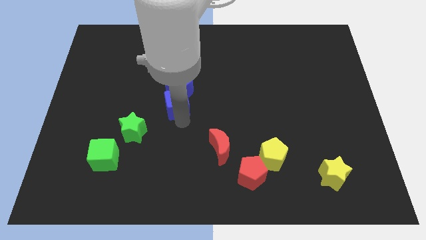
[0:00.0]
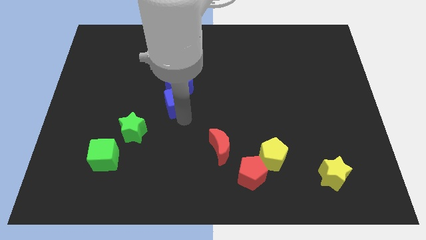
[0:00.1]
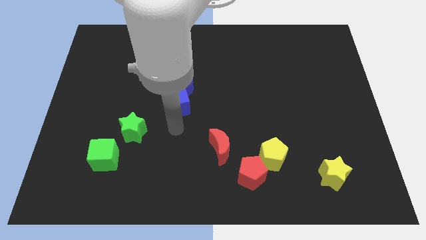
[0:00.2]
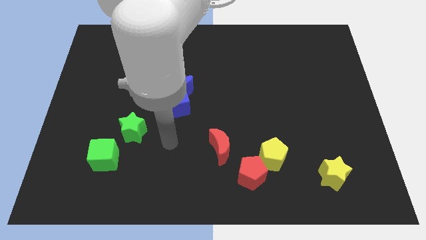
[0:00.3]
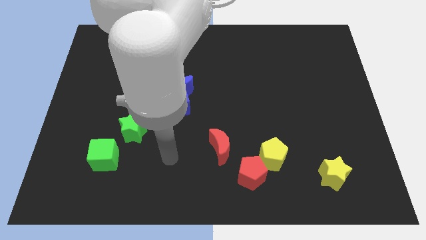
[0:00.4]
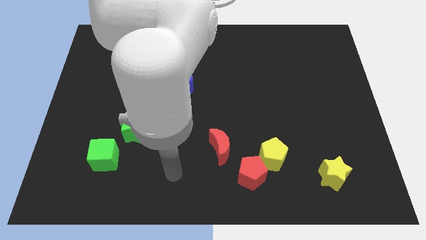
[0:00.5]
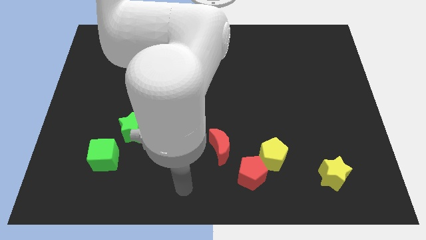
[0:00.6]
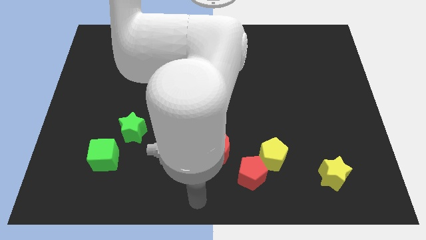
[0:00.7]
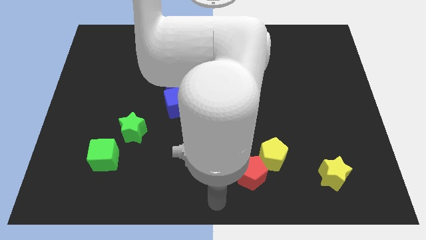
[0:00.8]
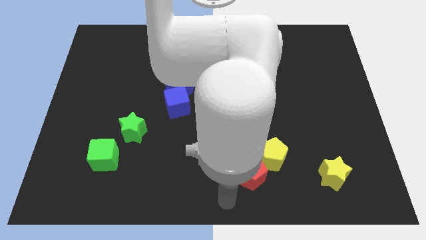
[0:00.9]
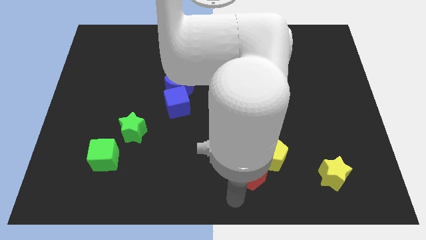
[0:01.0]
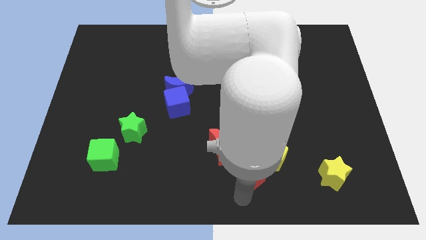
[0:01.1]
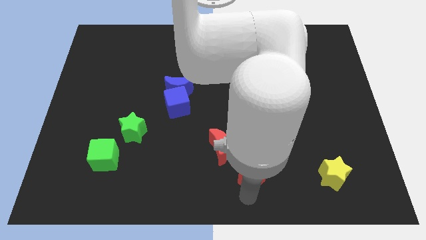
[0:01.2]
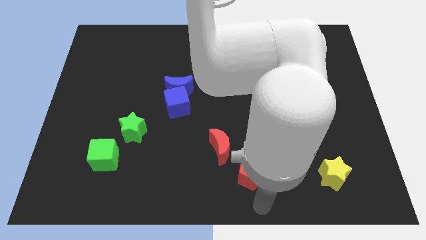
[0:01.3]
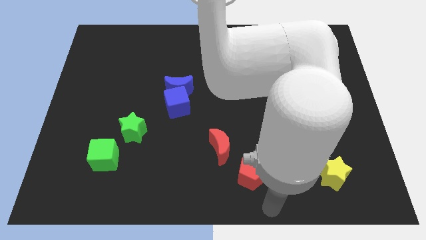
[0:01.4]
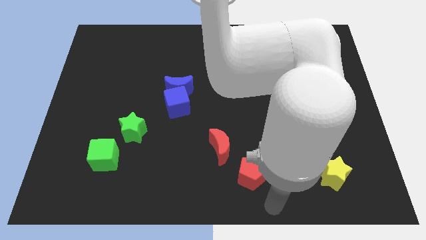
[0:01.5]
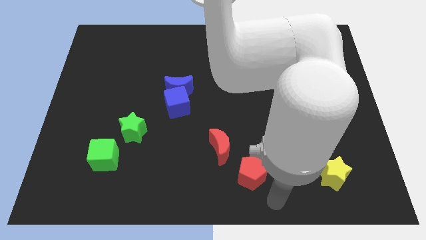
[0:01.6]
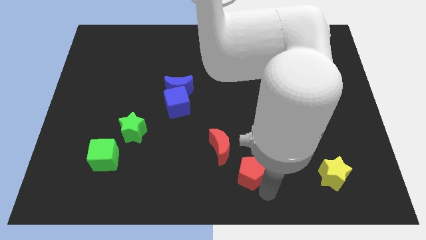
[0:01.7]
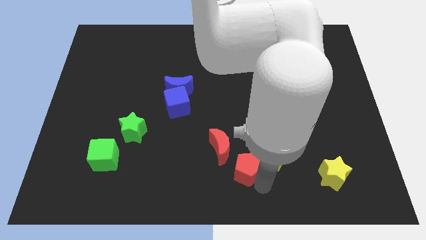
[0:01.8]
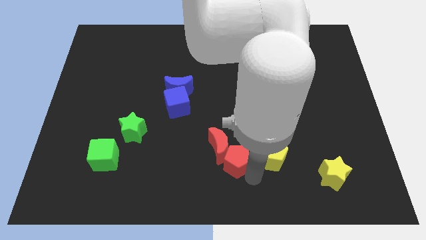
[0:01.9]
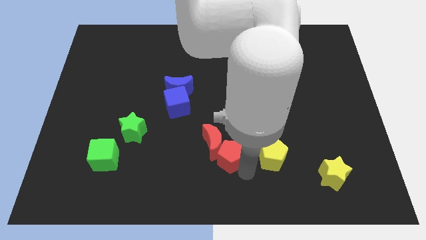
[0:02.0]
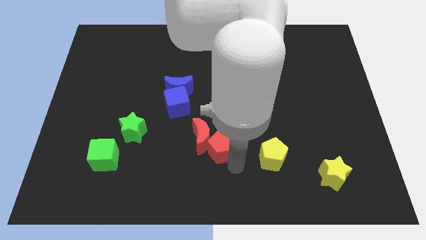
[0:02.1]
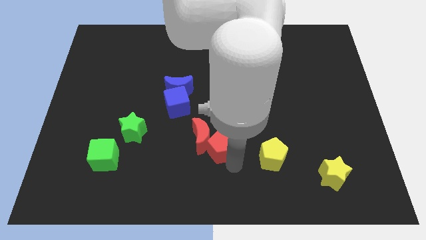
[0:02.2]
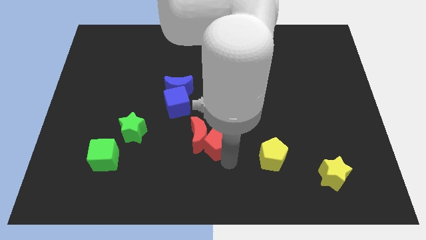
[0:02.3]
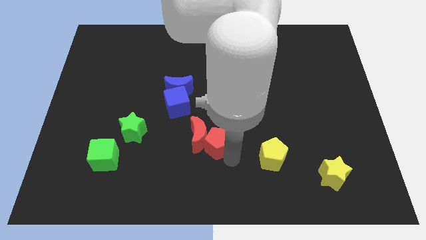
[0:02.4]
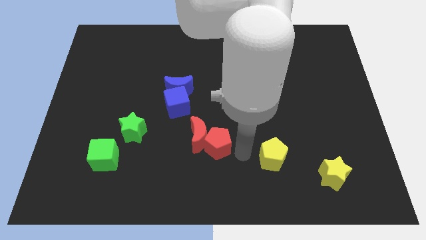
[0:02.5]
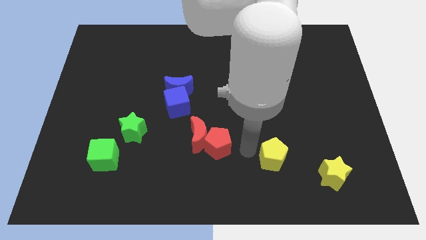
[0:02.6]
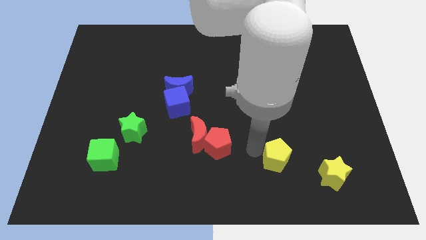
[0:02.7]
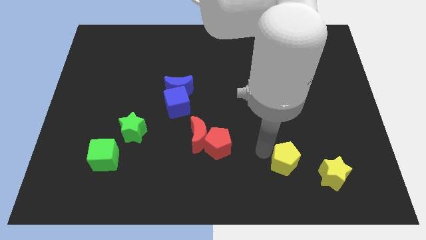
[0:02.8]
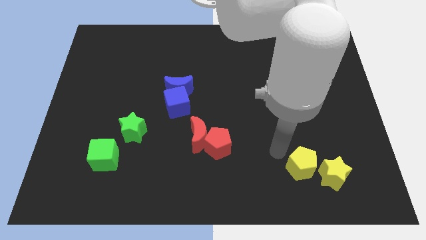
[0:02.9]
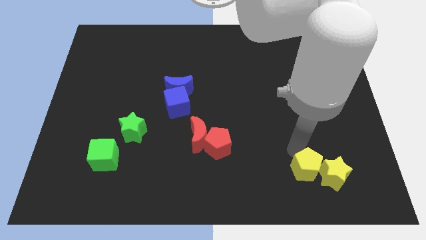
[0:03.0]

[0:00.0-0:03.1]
place red blocks together and yellow blocks together

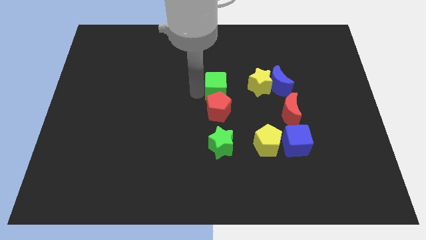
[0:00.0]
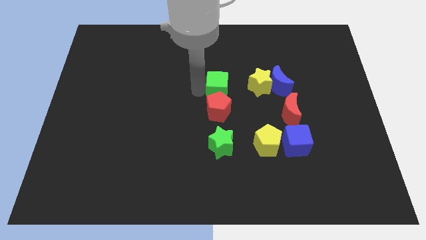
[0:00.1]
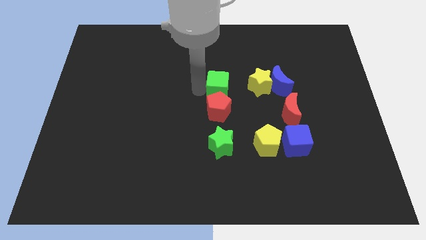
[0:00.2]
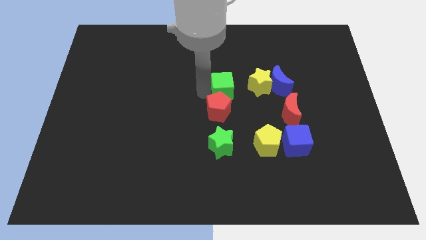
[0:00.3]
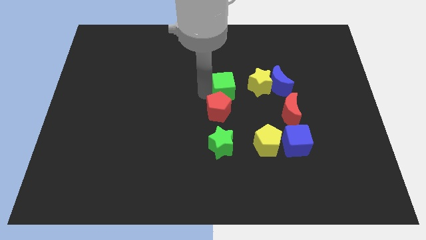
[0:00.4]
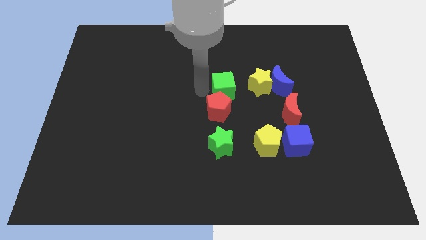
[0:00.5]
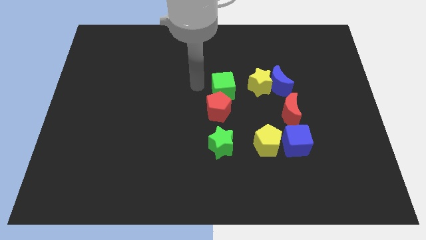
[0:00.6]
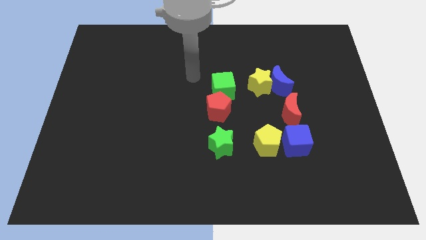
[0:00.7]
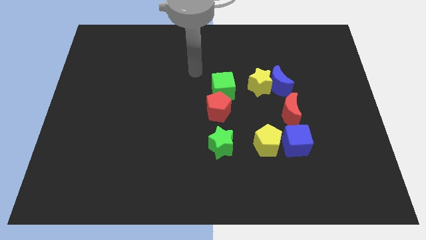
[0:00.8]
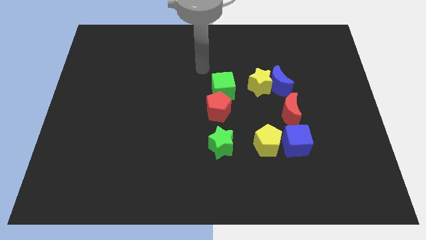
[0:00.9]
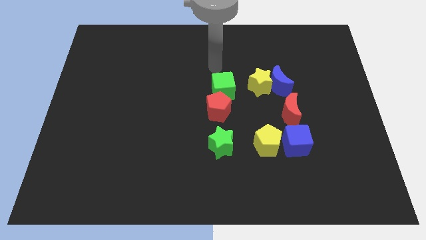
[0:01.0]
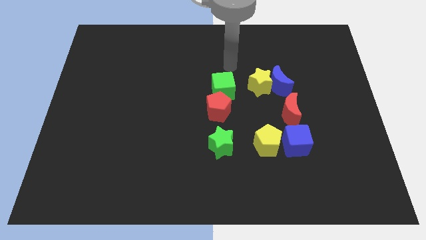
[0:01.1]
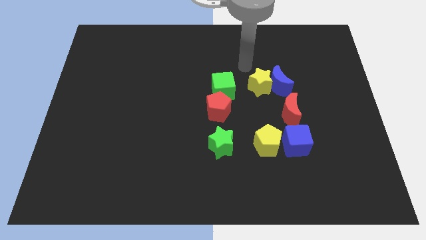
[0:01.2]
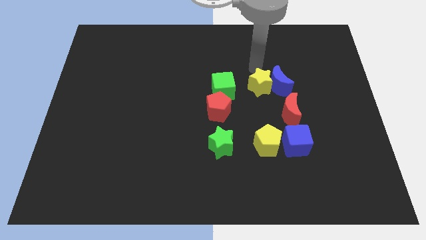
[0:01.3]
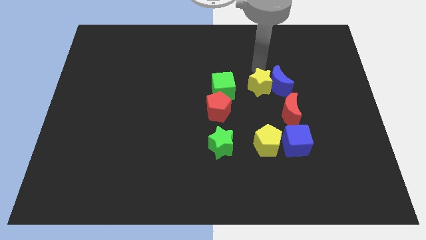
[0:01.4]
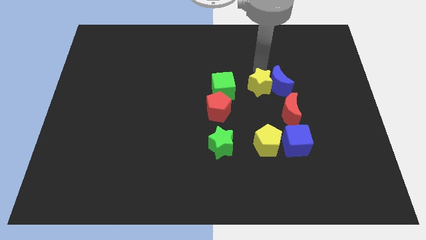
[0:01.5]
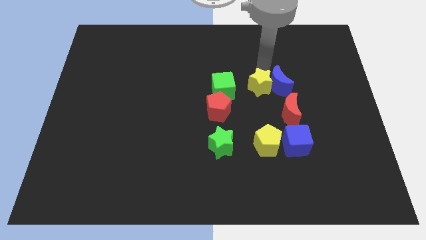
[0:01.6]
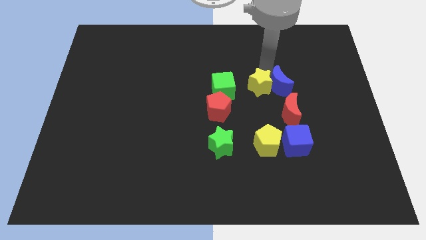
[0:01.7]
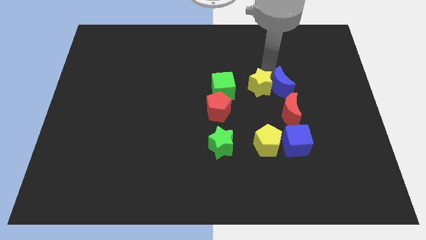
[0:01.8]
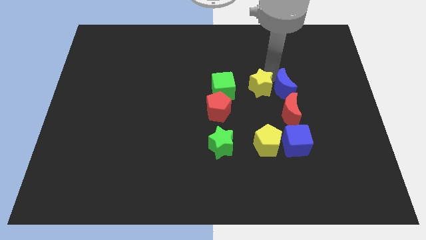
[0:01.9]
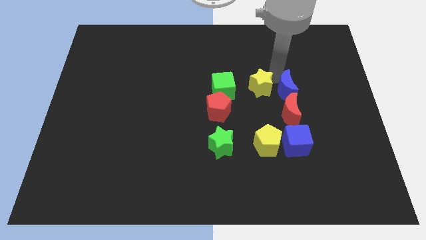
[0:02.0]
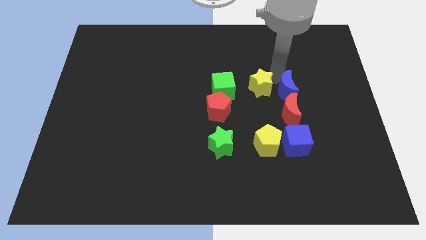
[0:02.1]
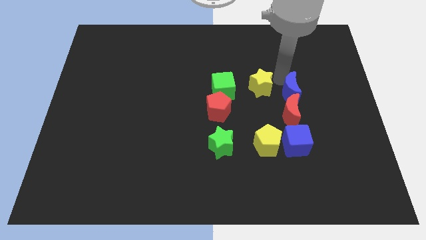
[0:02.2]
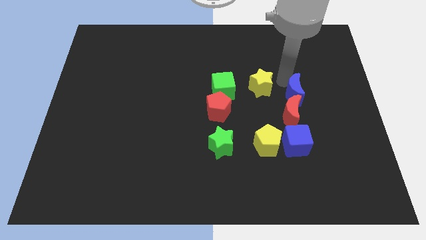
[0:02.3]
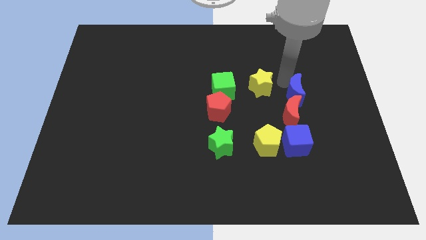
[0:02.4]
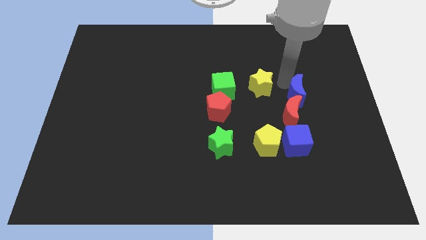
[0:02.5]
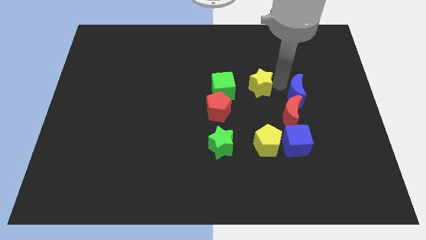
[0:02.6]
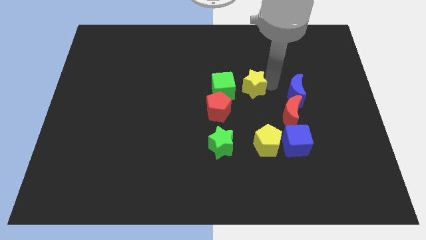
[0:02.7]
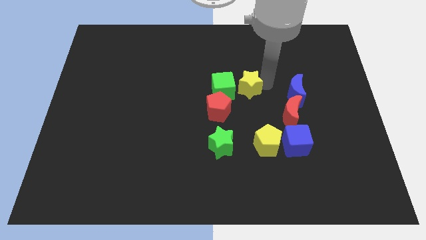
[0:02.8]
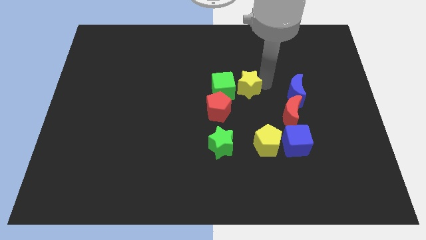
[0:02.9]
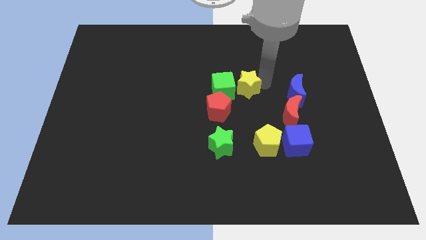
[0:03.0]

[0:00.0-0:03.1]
push the blue moon to top of the red moon

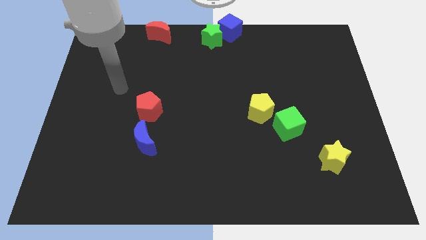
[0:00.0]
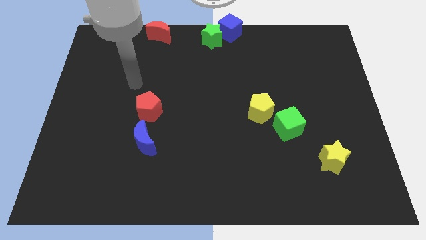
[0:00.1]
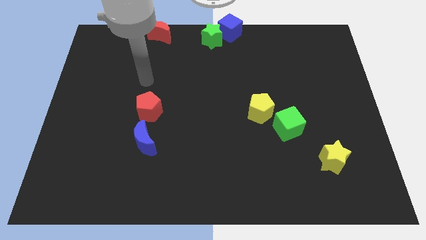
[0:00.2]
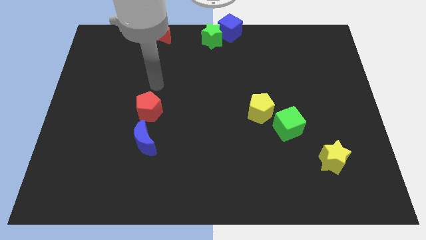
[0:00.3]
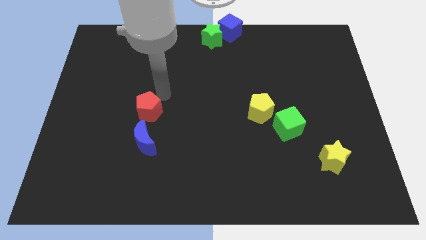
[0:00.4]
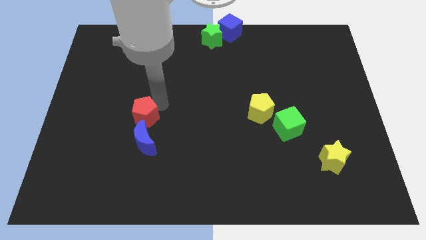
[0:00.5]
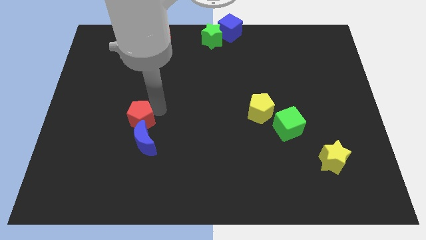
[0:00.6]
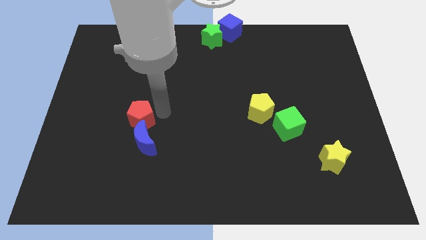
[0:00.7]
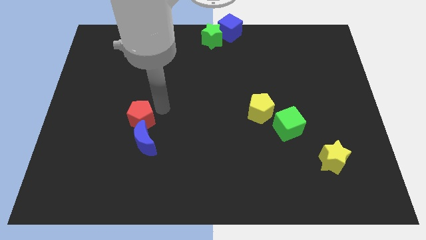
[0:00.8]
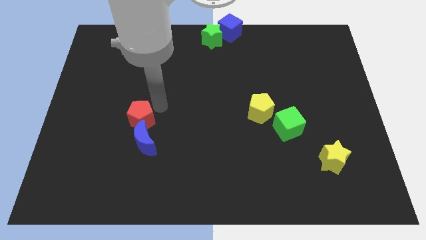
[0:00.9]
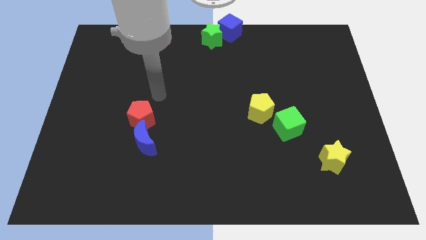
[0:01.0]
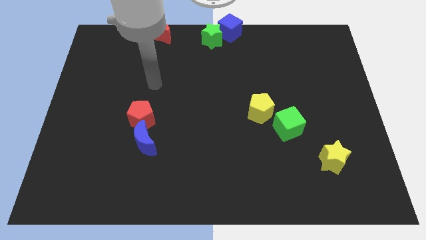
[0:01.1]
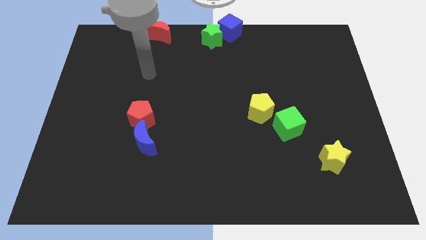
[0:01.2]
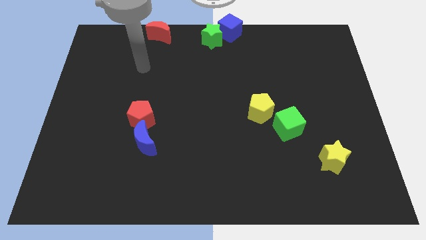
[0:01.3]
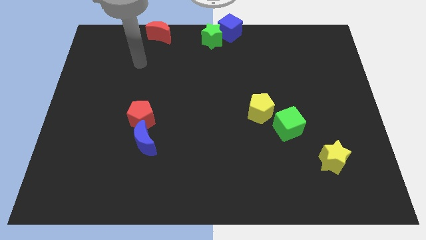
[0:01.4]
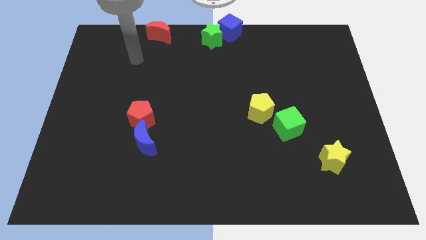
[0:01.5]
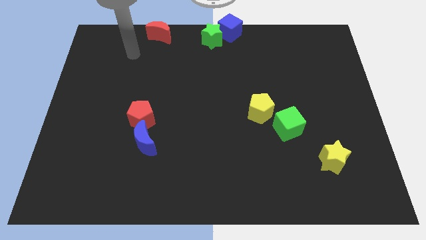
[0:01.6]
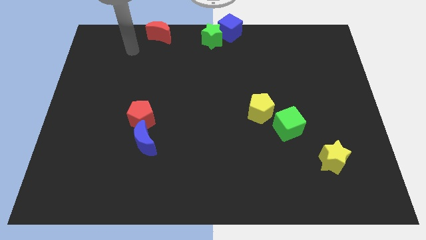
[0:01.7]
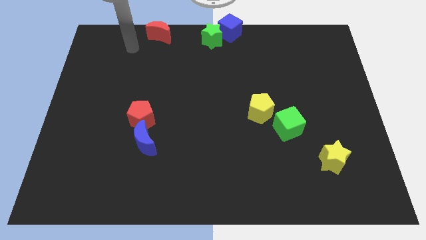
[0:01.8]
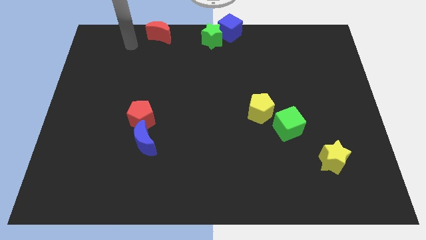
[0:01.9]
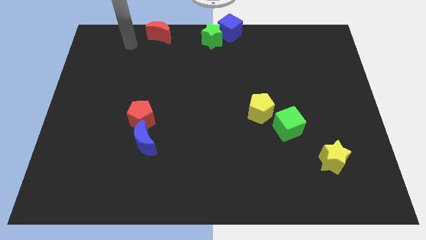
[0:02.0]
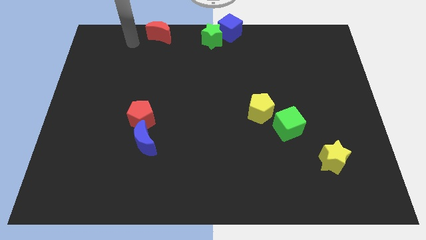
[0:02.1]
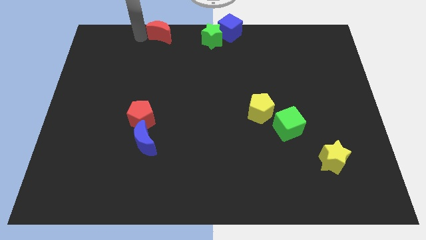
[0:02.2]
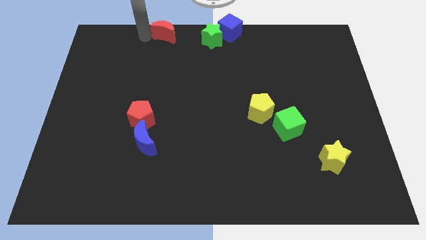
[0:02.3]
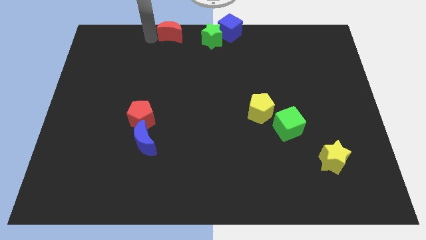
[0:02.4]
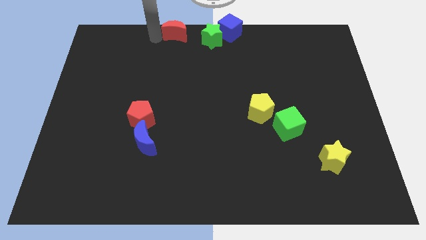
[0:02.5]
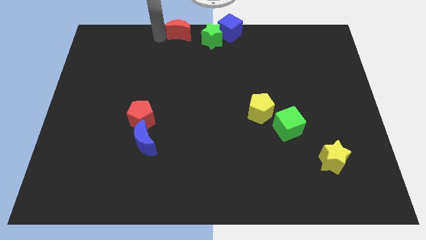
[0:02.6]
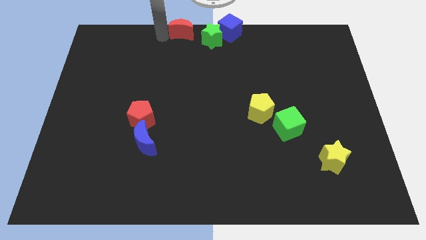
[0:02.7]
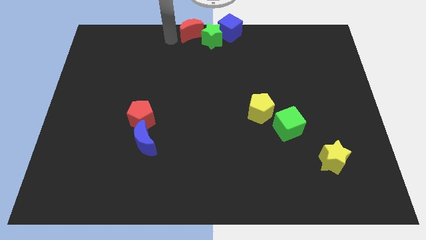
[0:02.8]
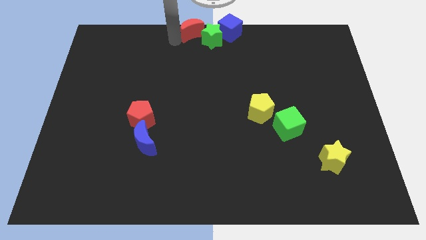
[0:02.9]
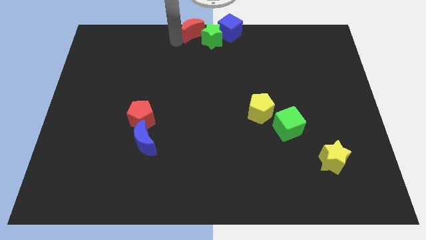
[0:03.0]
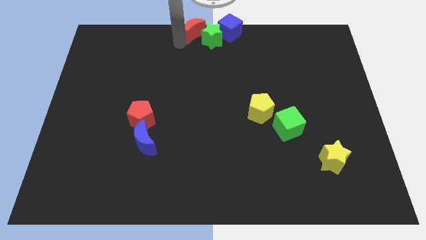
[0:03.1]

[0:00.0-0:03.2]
place red moon to the left of green star
